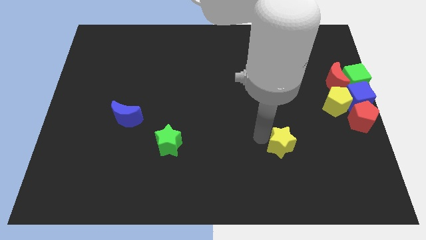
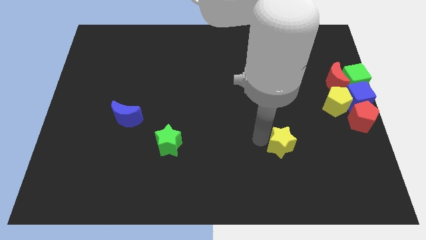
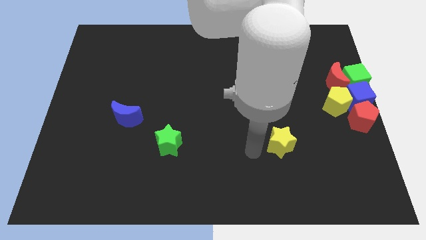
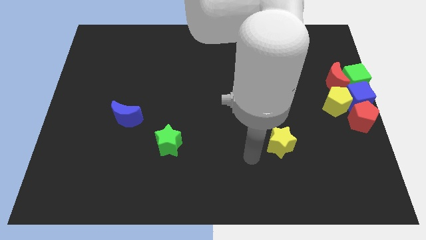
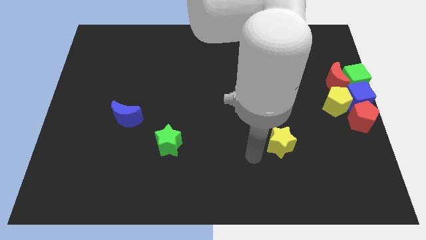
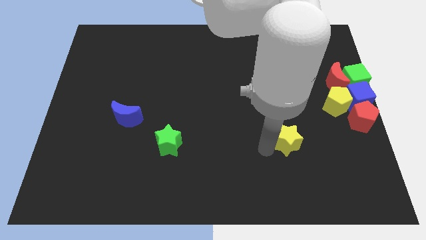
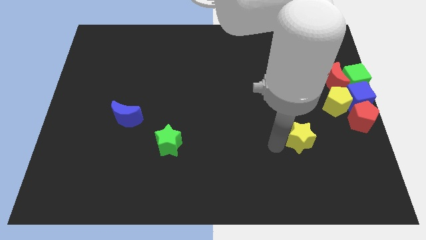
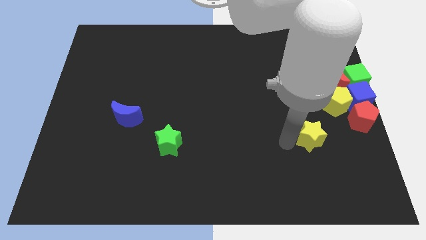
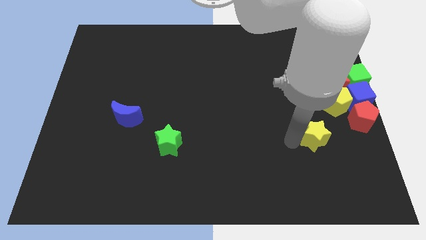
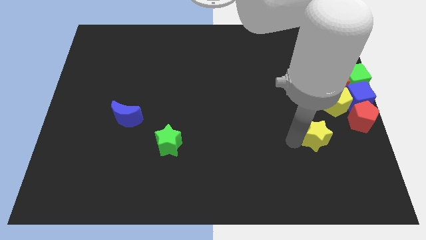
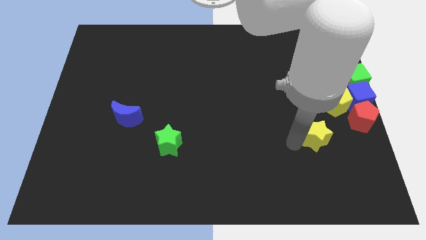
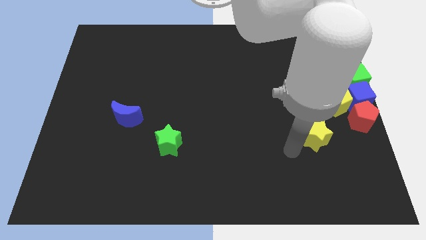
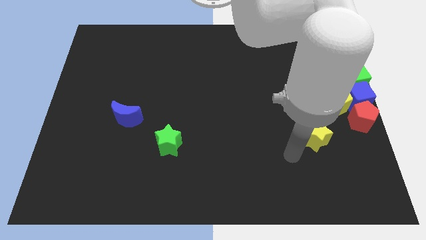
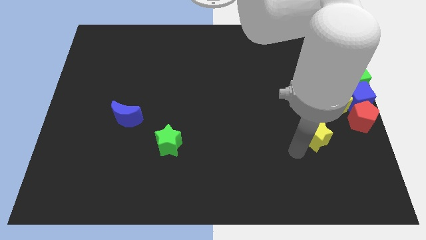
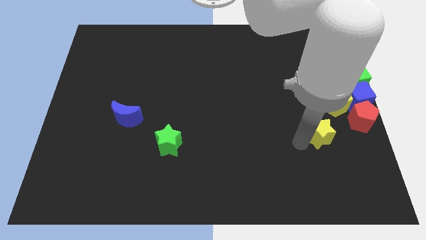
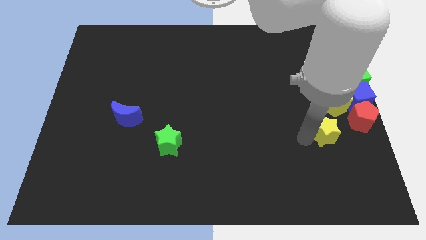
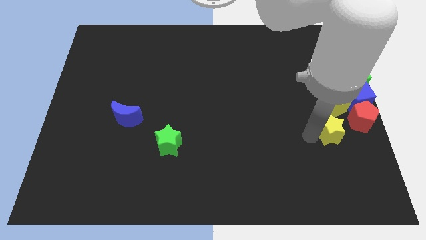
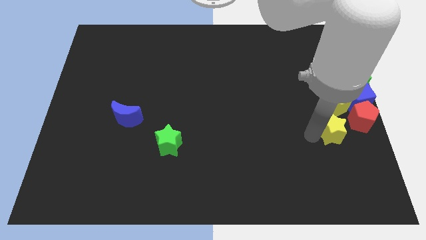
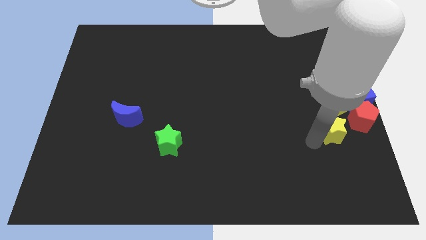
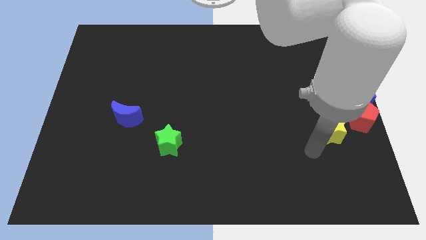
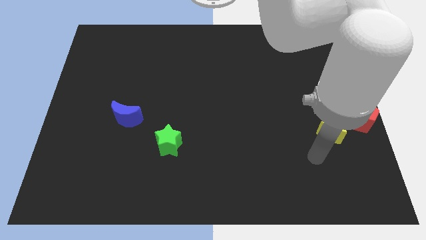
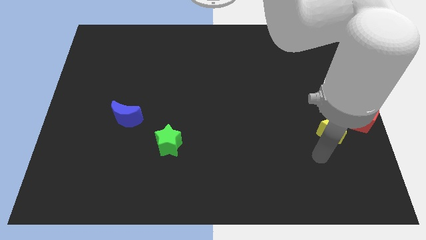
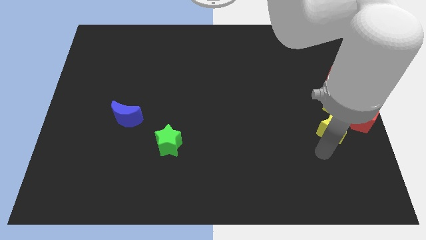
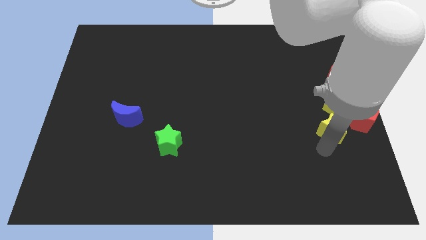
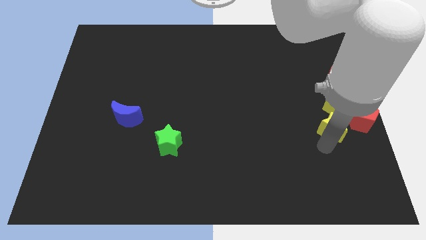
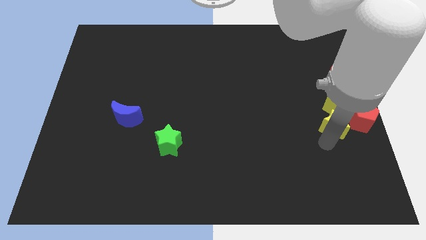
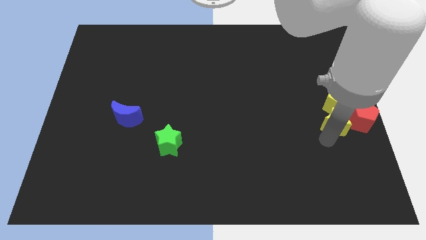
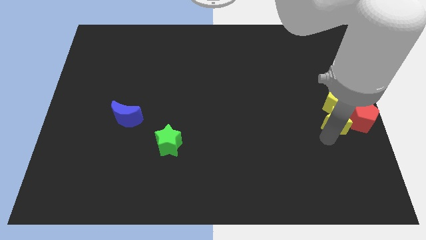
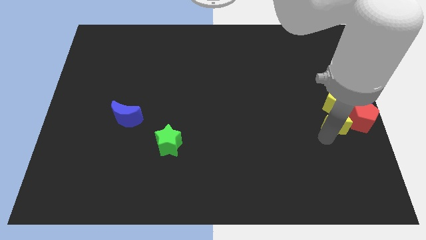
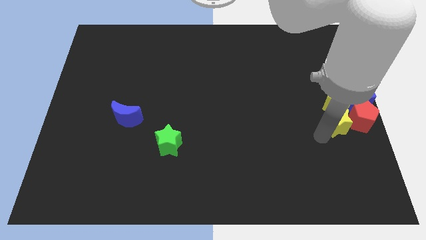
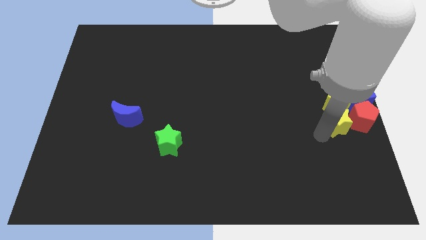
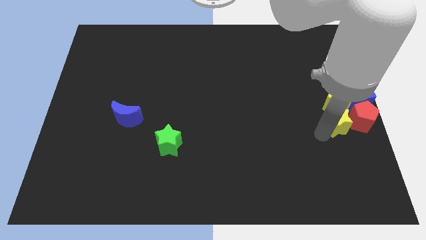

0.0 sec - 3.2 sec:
place the yellow star below the yellow pentagon

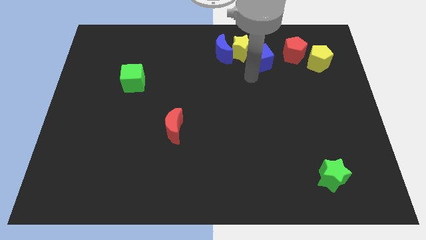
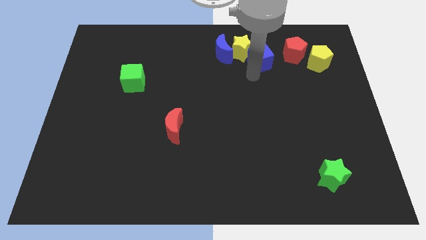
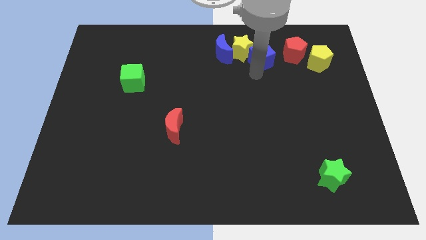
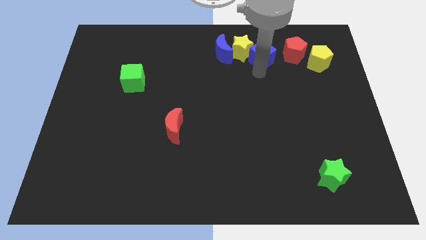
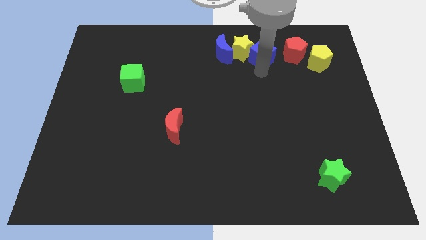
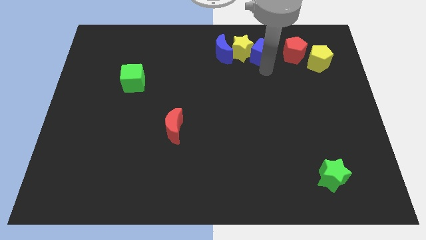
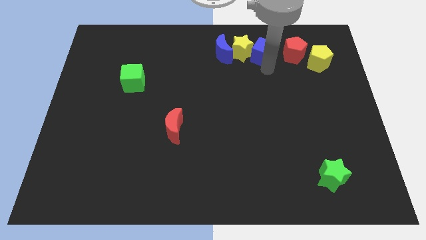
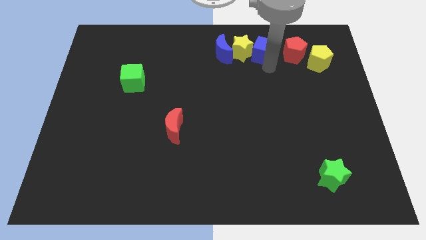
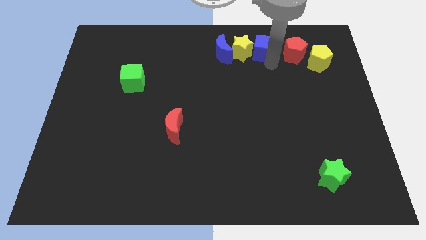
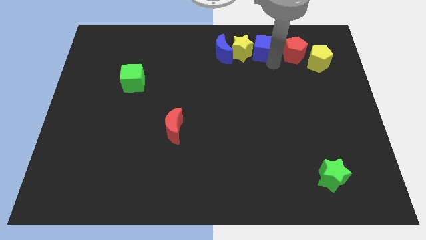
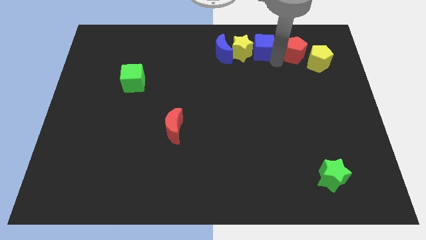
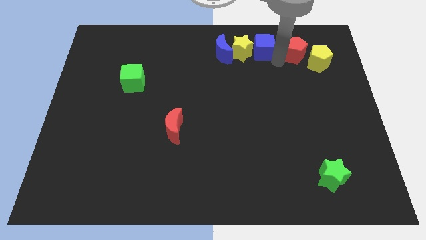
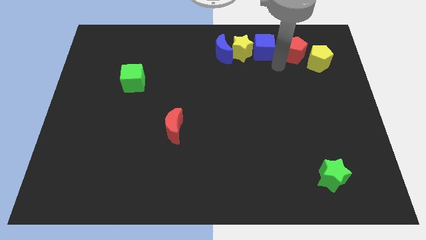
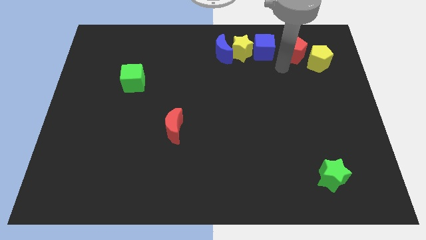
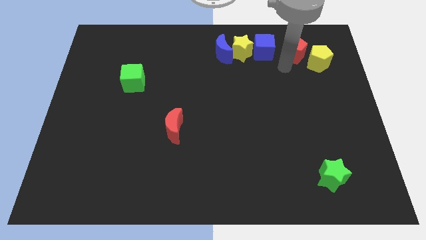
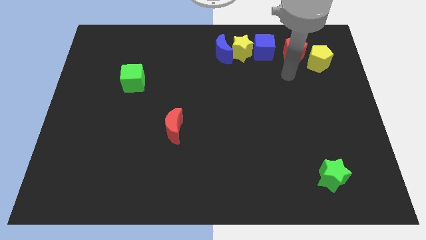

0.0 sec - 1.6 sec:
move your arm towards the red pentagon

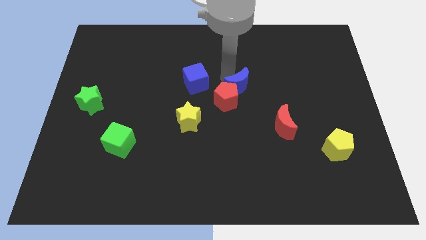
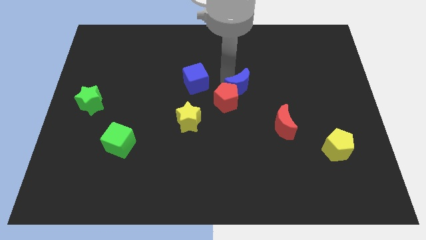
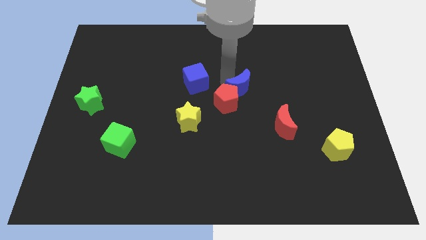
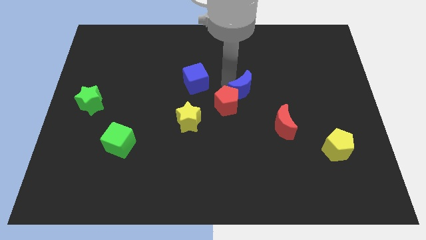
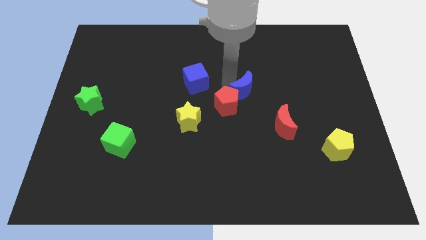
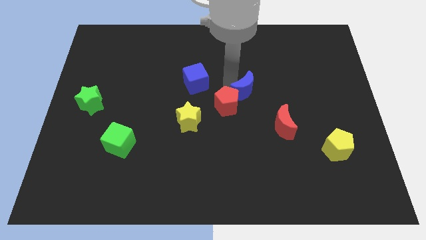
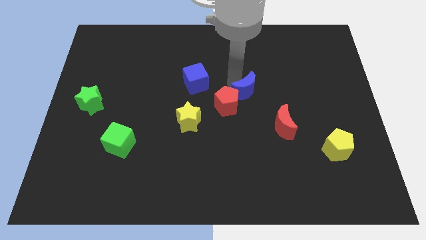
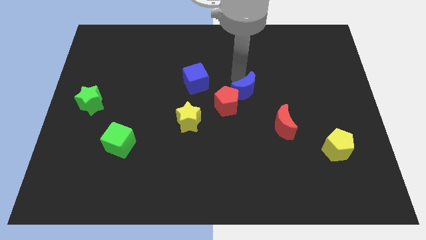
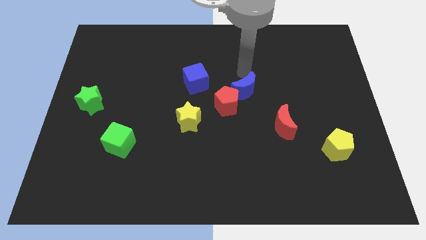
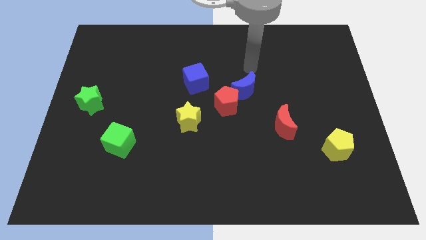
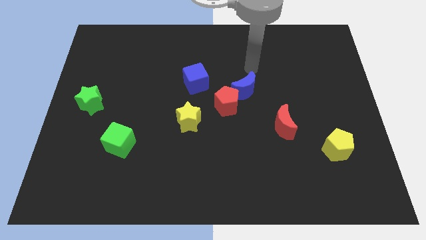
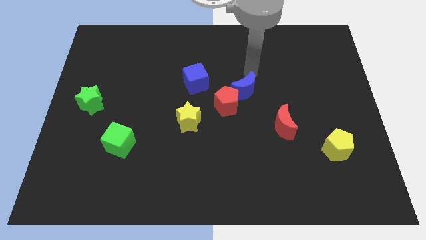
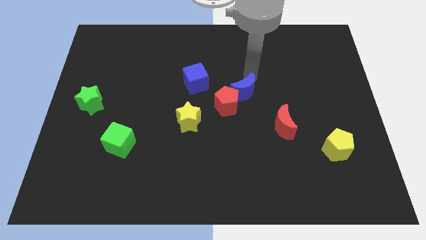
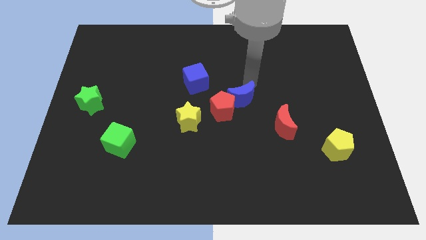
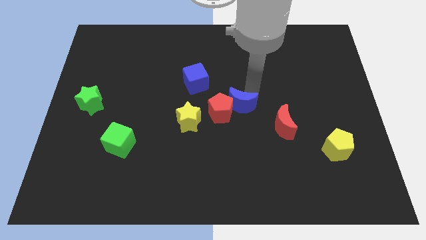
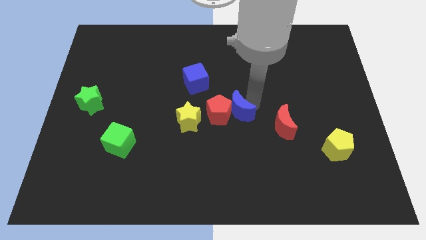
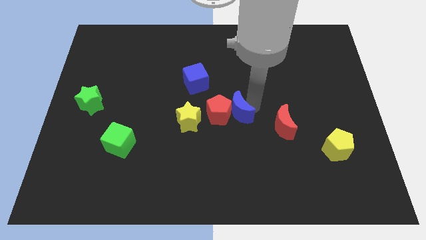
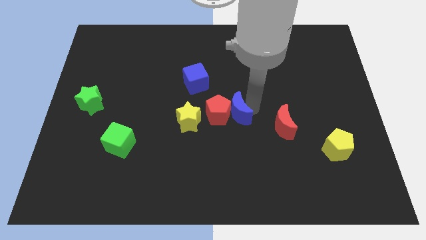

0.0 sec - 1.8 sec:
push the blue crescent to the right of the red pentagon

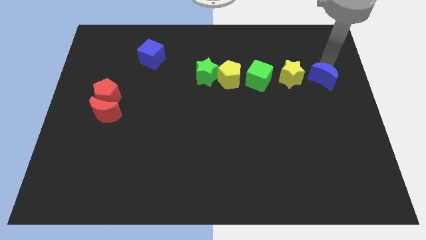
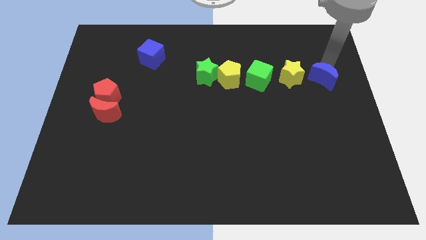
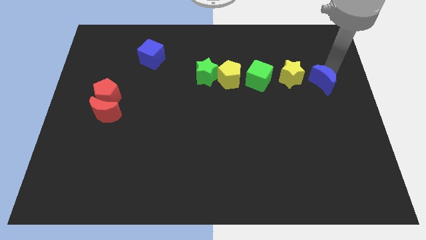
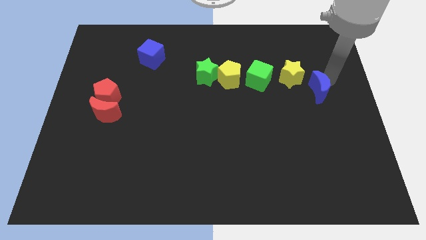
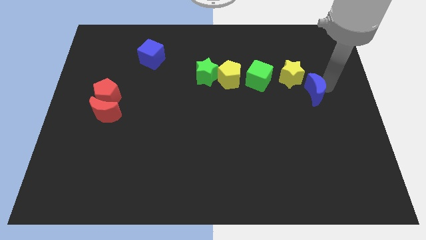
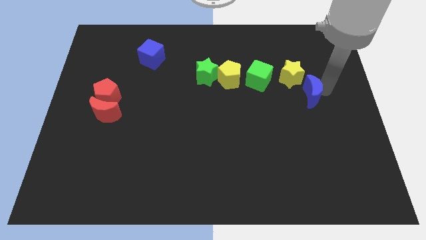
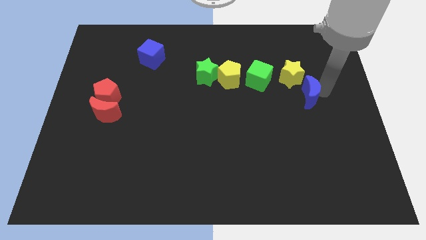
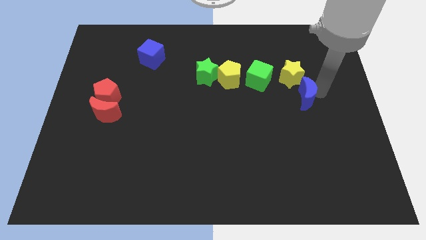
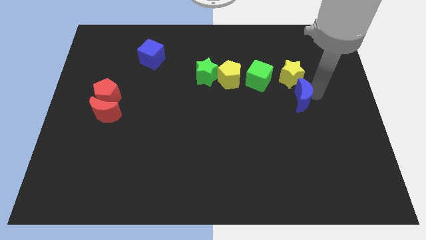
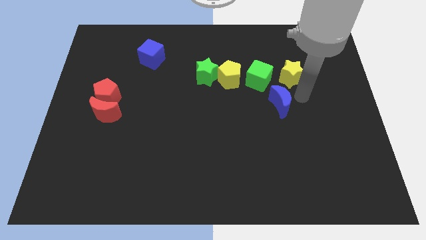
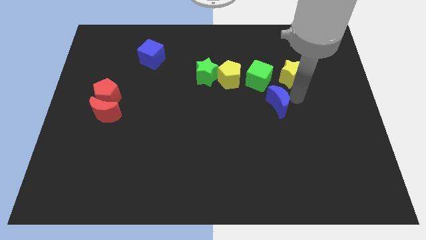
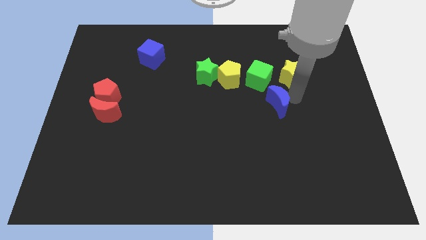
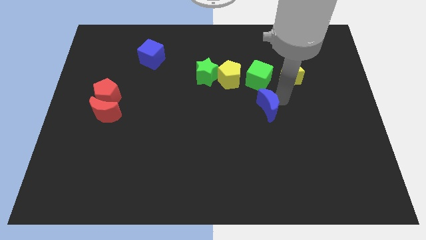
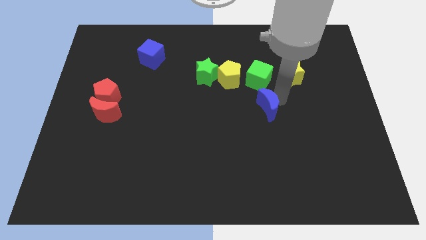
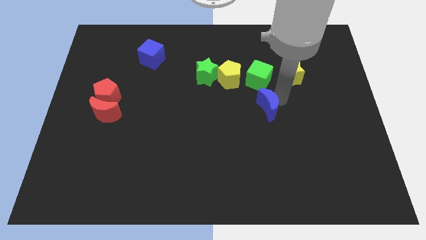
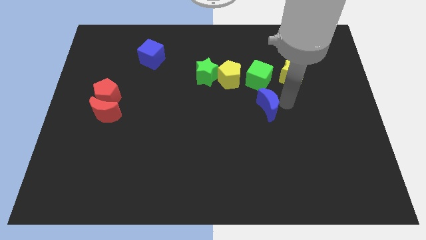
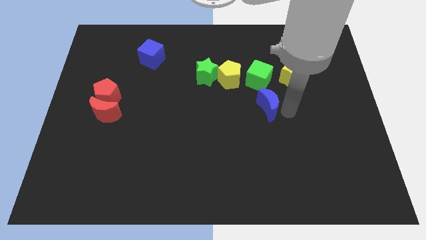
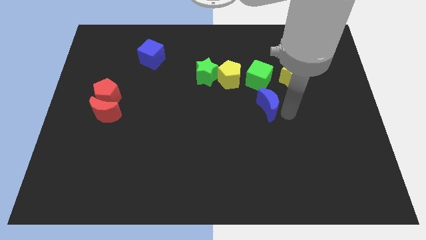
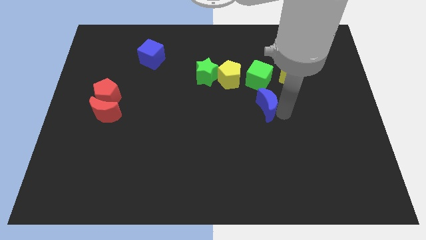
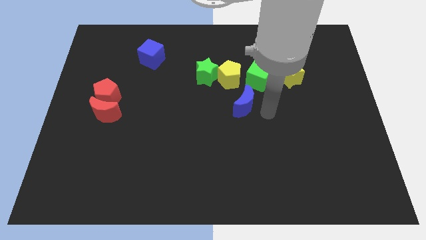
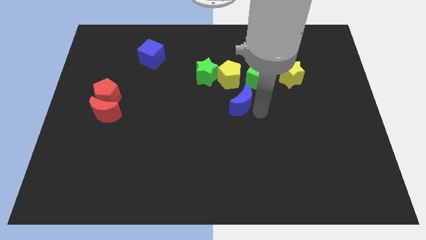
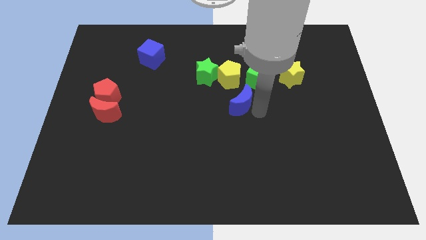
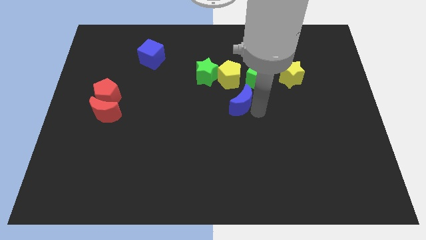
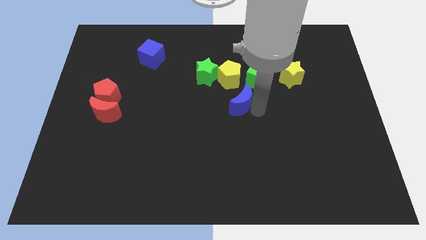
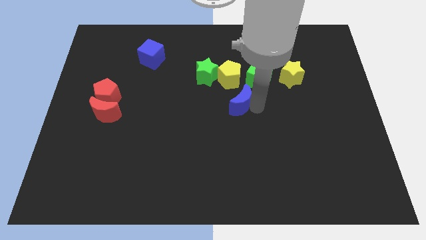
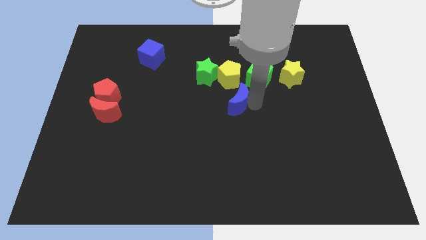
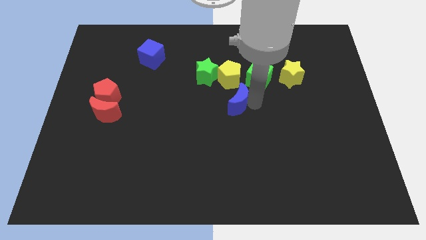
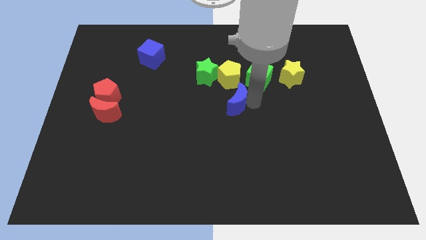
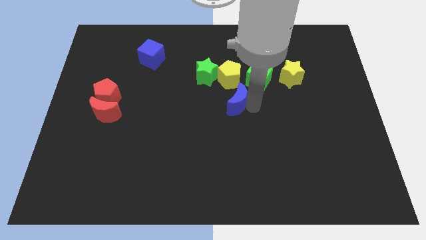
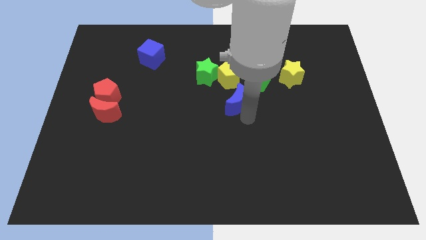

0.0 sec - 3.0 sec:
put the blue moon at the bottom of yellow pentagon
